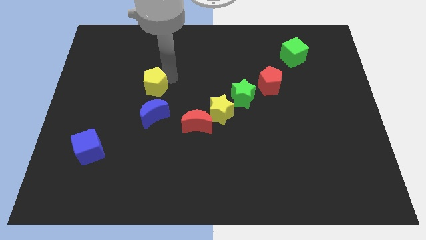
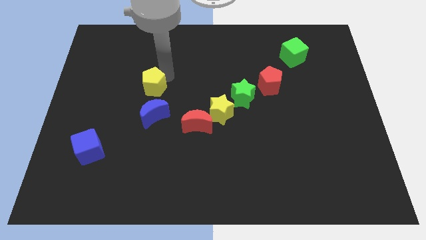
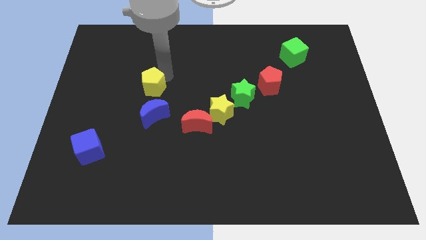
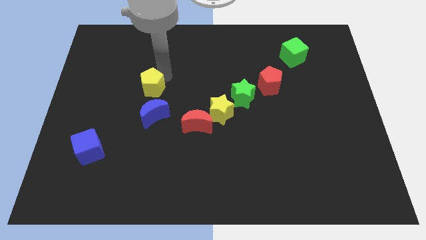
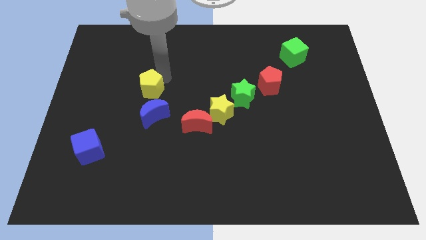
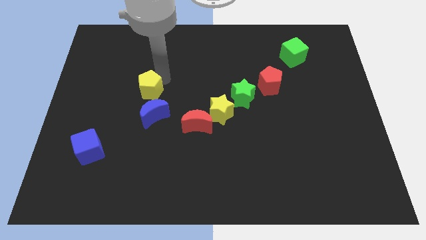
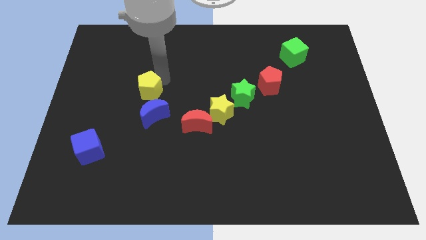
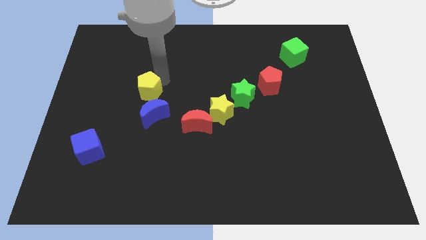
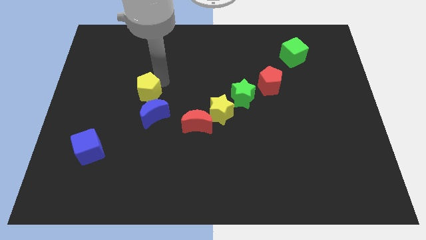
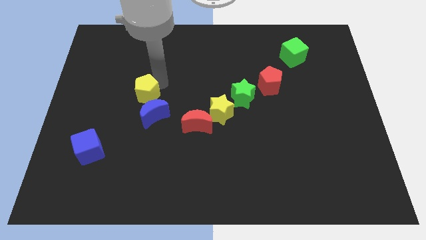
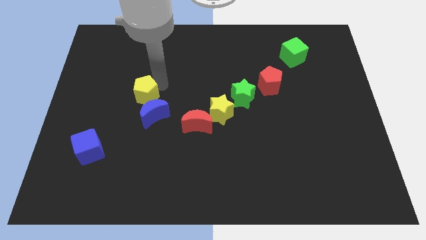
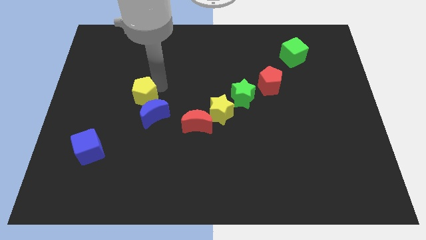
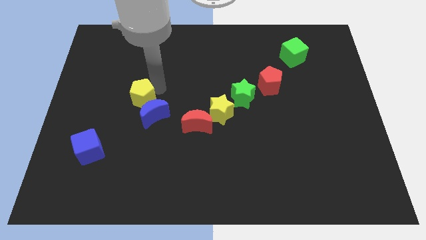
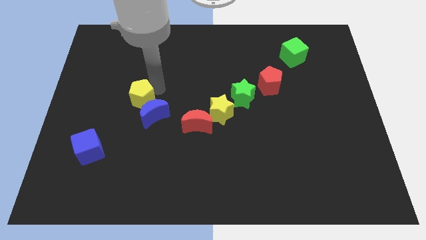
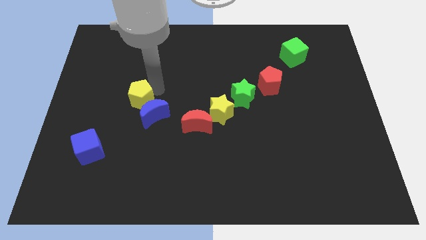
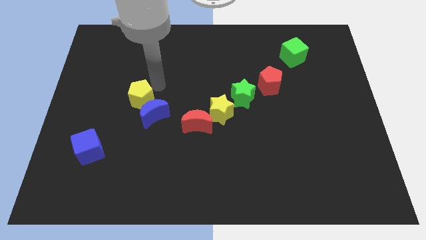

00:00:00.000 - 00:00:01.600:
move the yellow pentagon close to the blue crescent

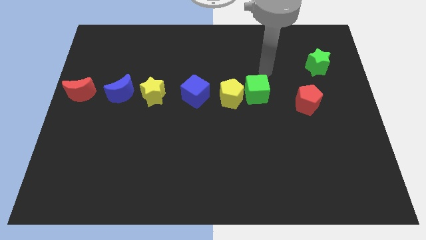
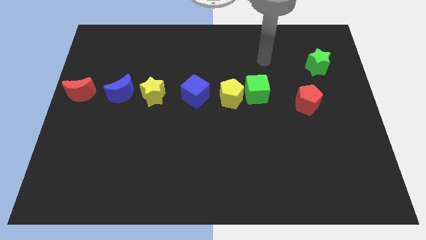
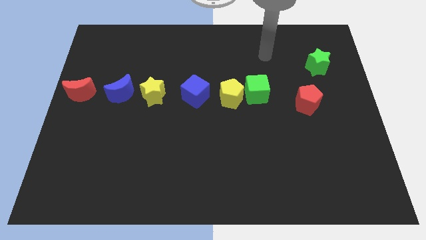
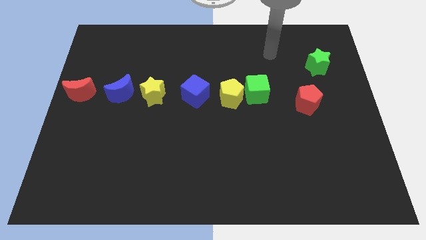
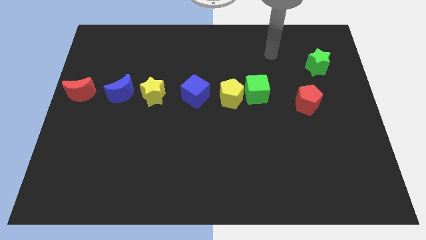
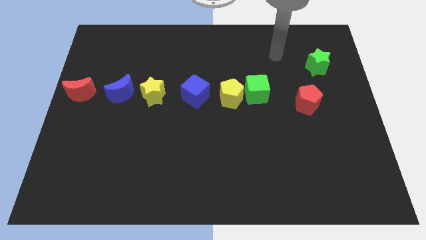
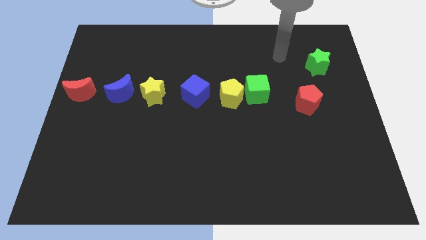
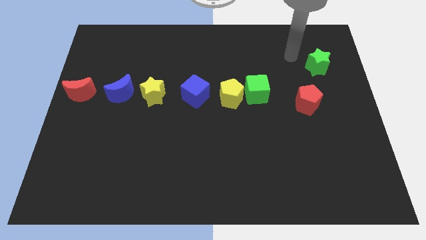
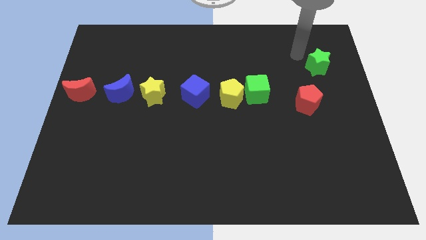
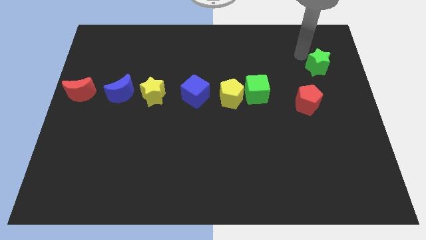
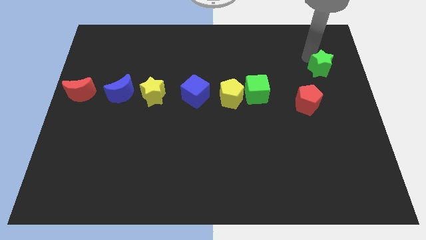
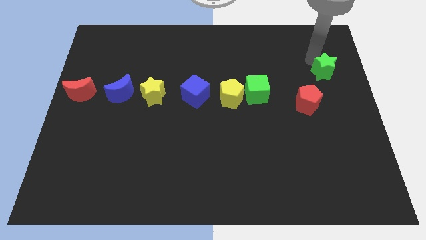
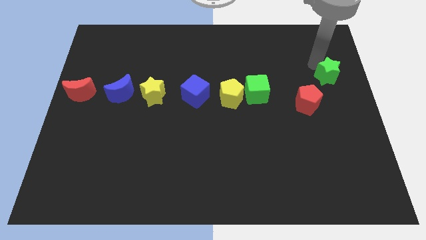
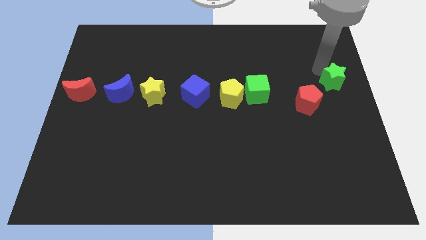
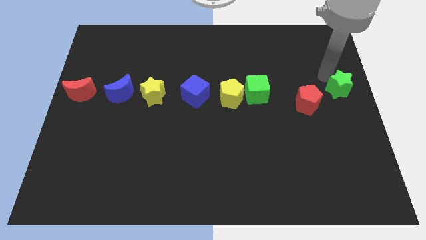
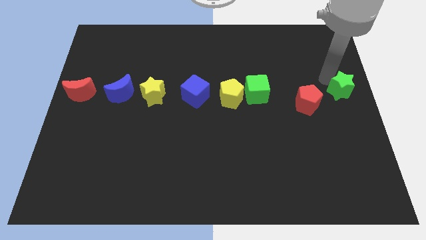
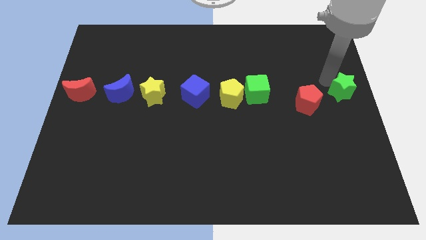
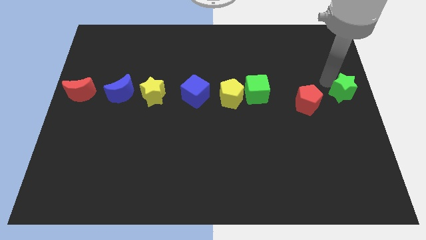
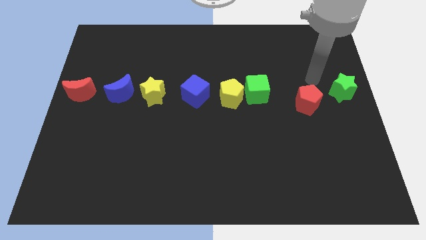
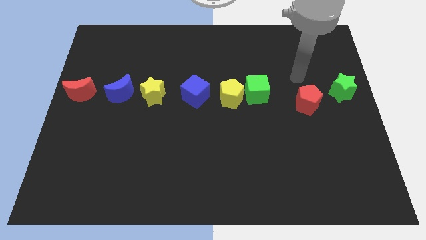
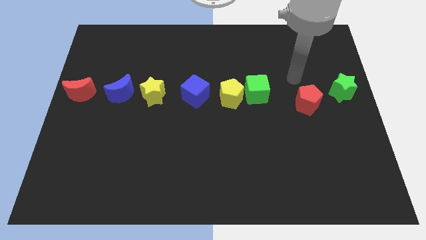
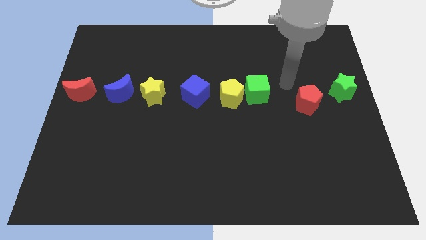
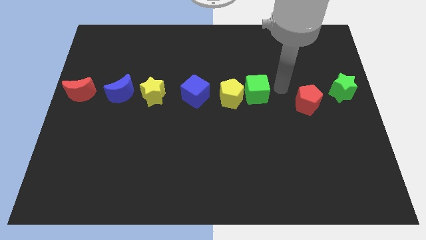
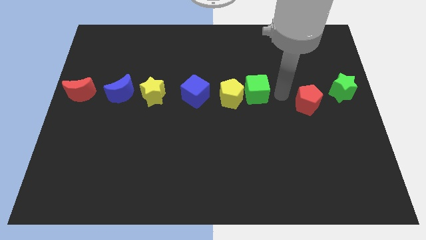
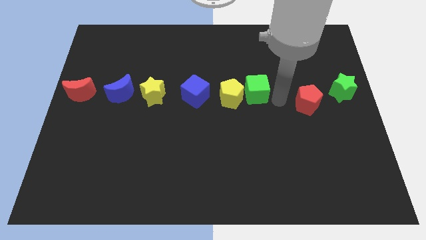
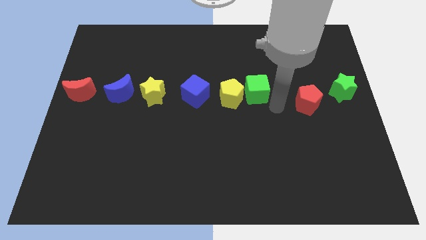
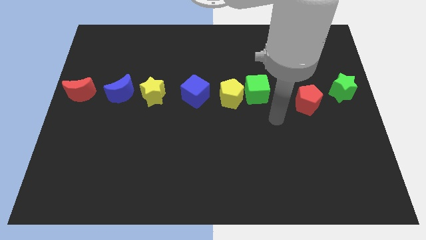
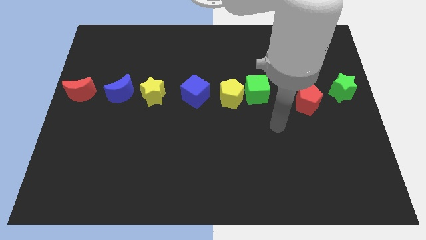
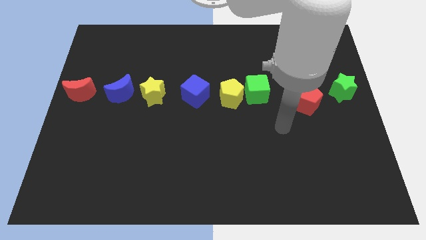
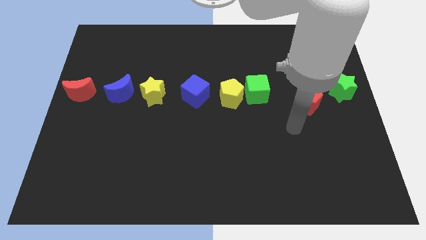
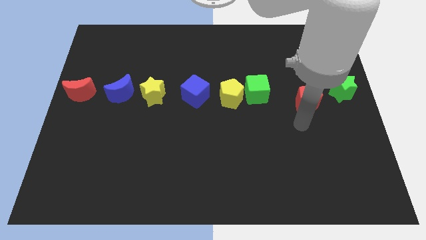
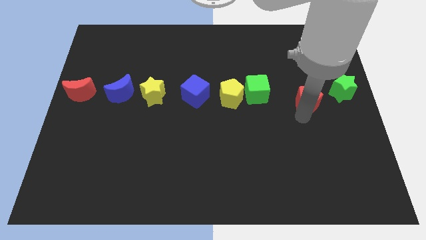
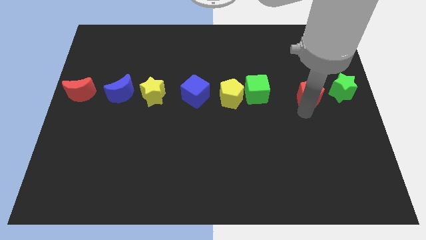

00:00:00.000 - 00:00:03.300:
put the green star at the center right

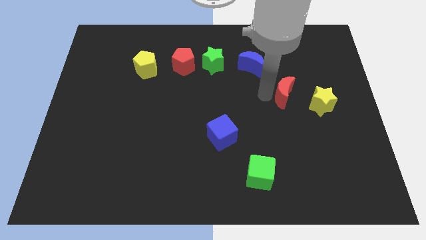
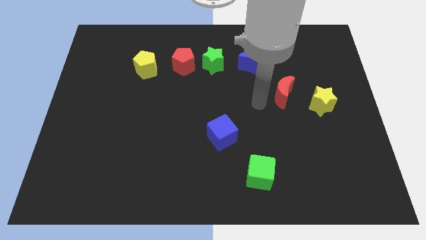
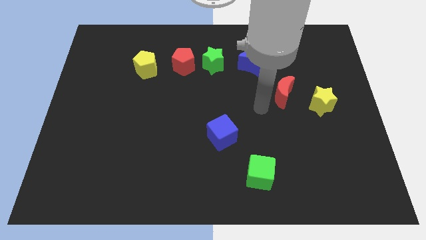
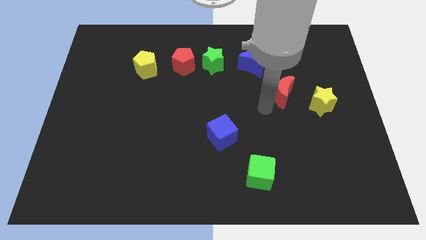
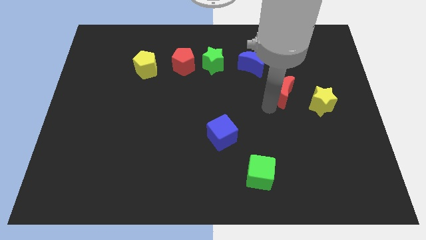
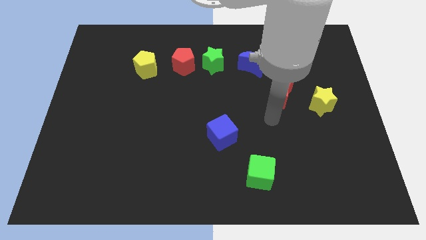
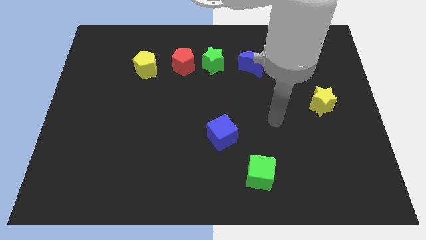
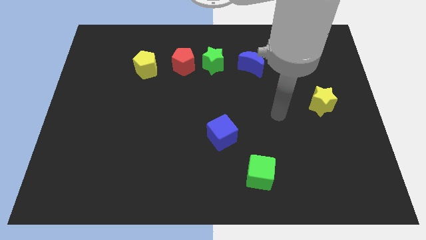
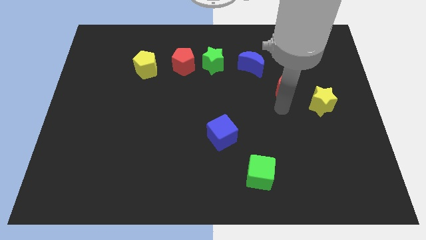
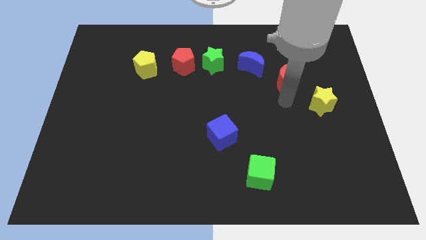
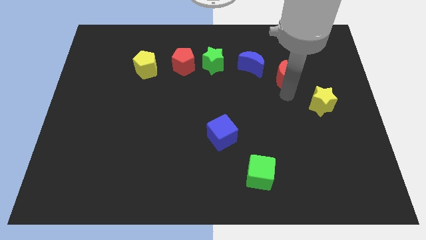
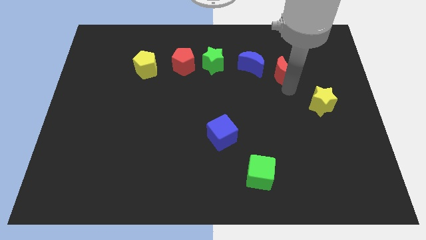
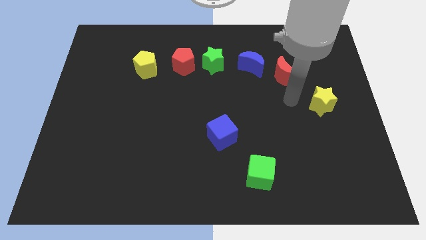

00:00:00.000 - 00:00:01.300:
push the red moon to the right of the blue moon

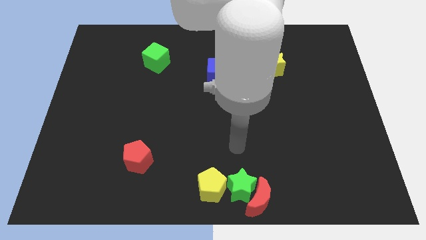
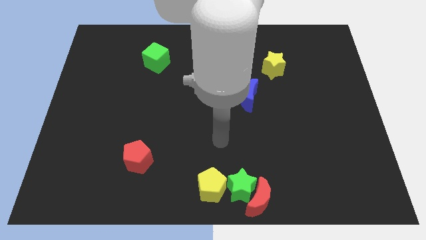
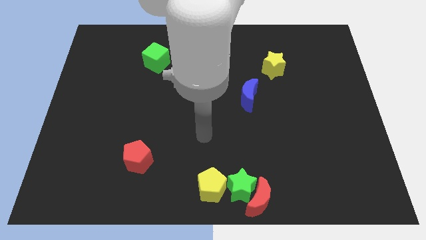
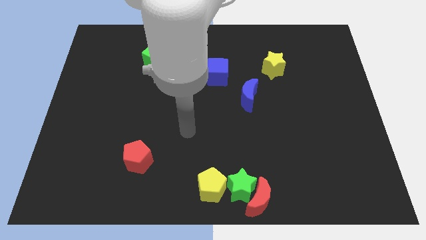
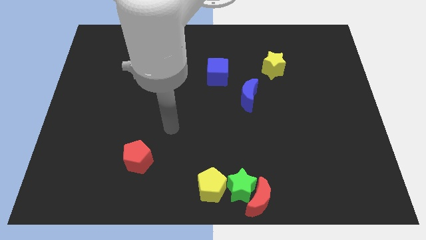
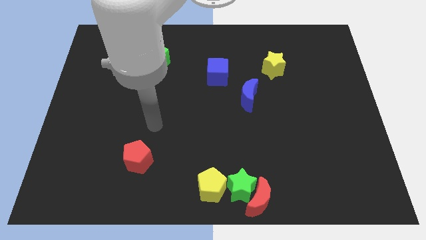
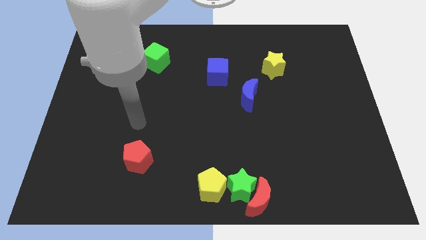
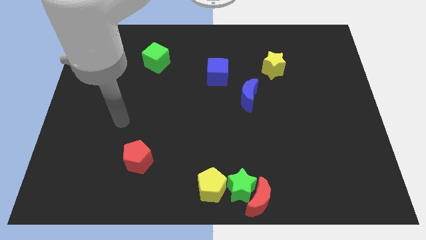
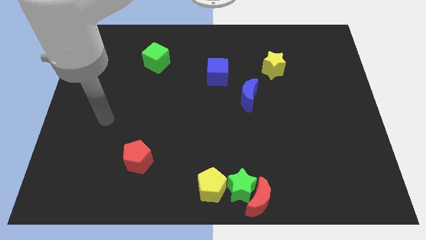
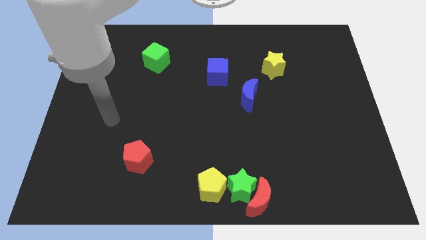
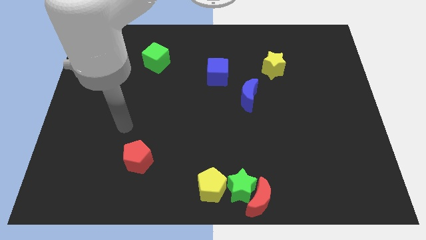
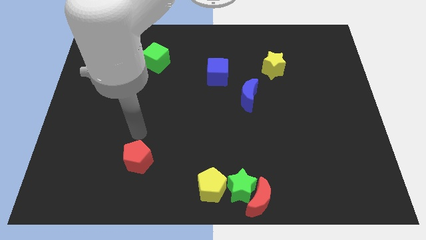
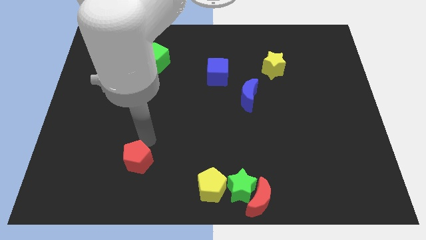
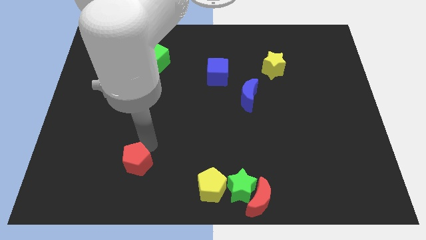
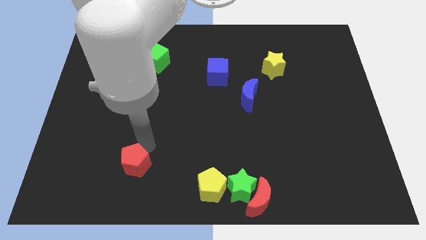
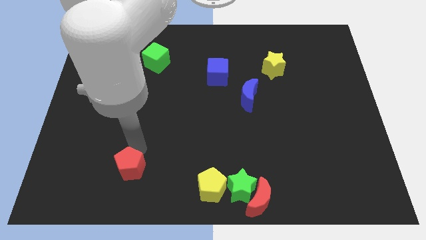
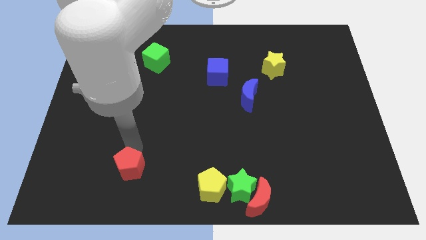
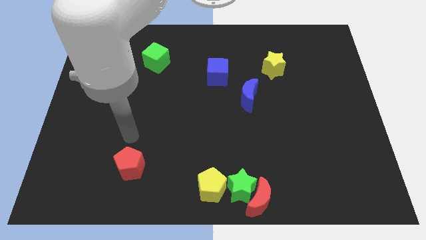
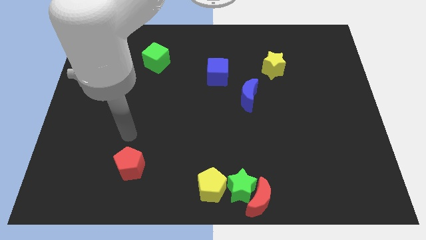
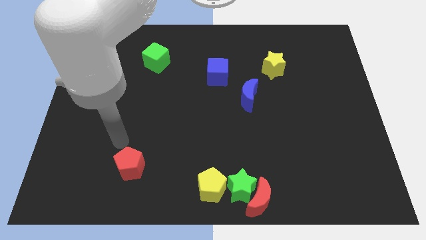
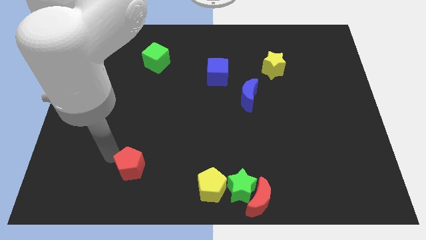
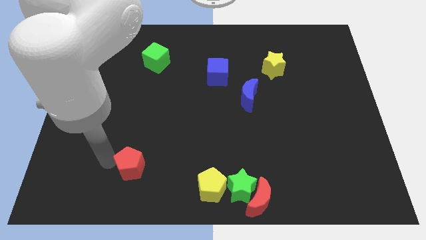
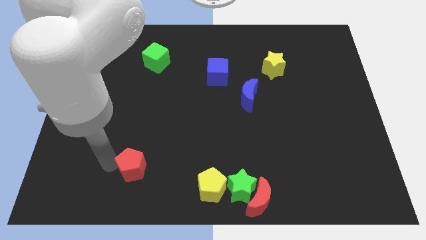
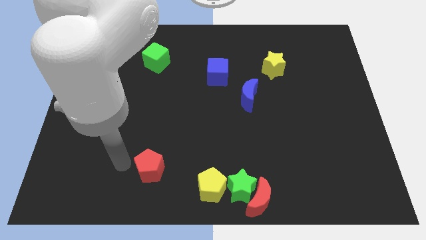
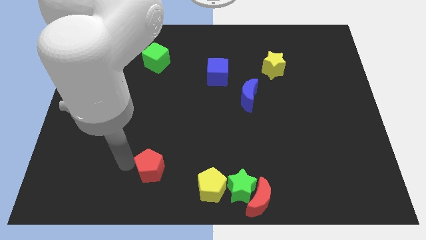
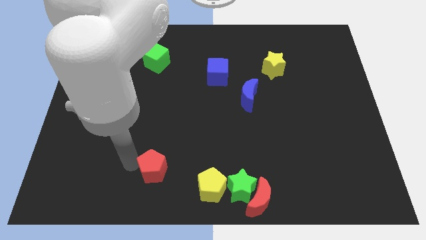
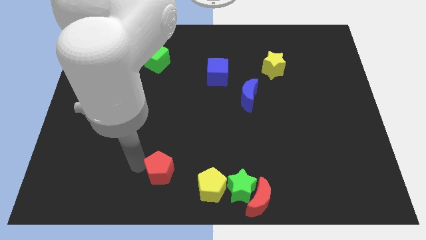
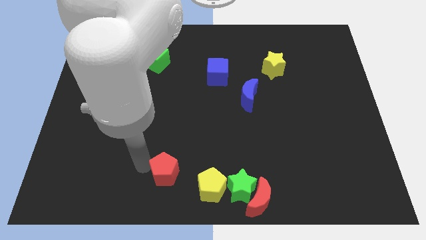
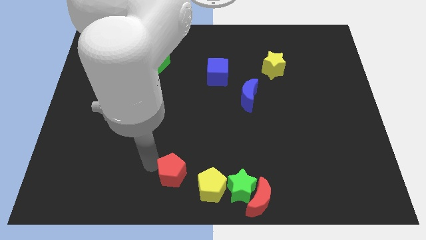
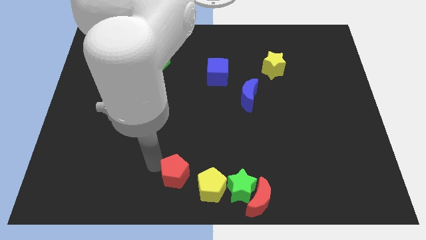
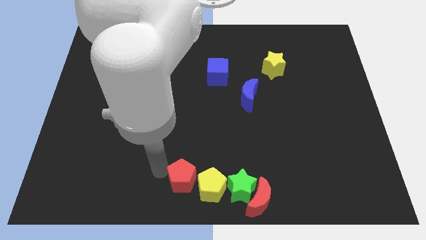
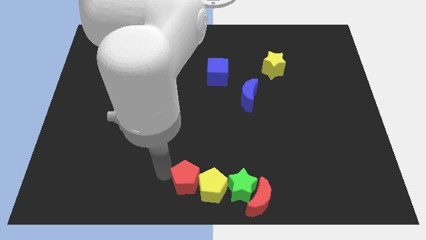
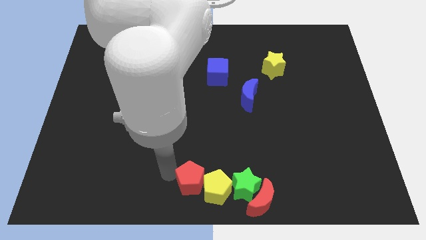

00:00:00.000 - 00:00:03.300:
slide the red pentagon into the yellow pentagon
